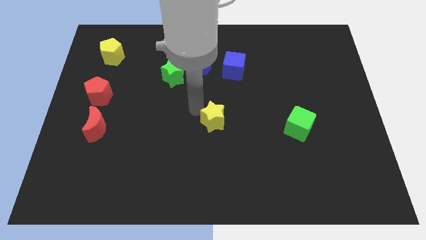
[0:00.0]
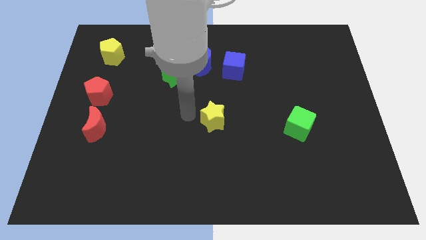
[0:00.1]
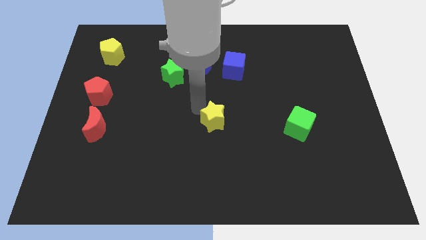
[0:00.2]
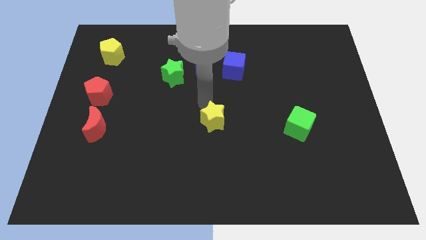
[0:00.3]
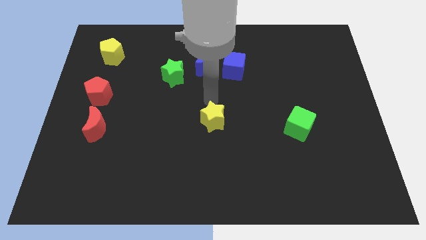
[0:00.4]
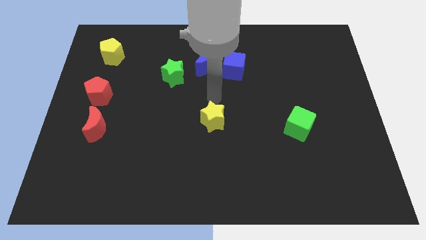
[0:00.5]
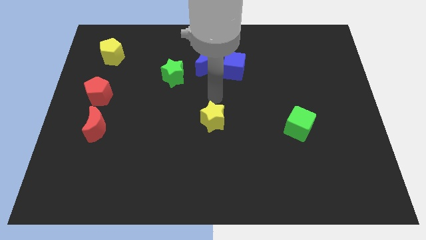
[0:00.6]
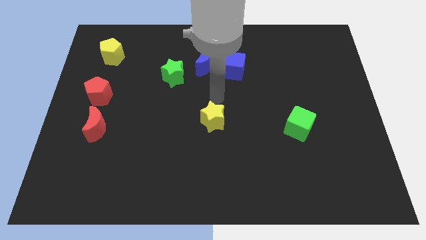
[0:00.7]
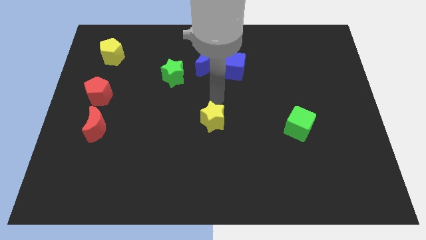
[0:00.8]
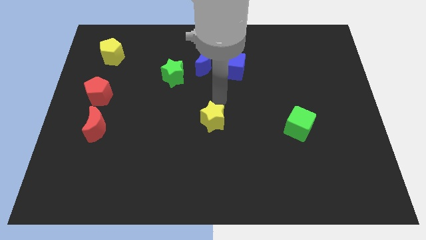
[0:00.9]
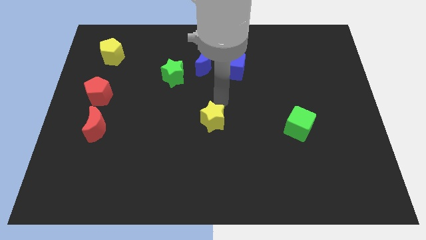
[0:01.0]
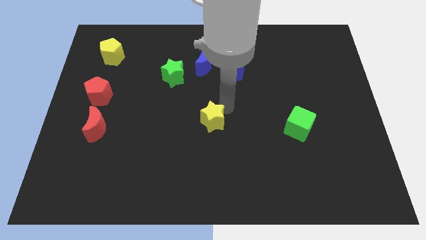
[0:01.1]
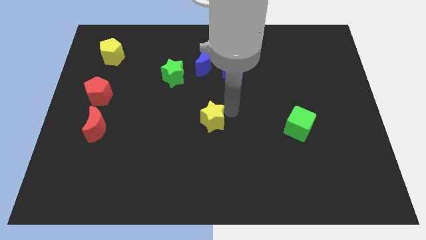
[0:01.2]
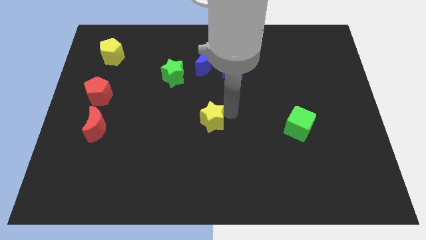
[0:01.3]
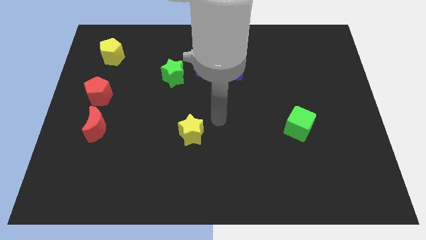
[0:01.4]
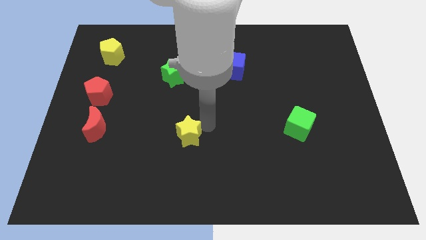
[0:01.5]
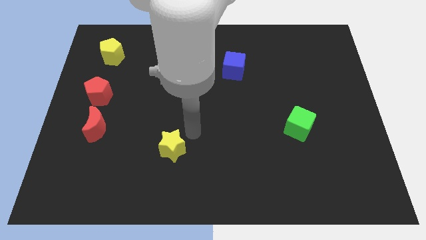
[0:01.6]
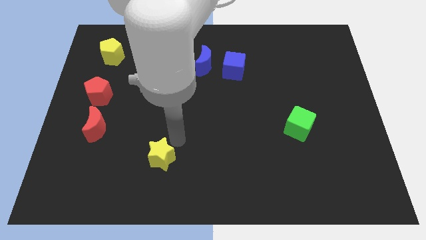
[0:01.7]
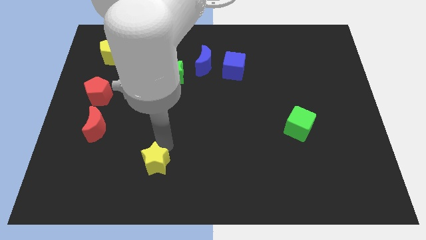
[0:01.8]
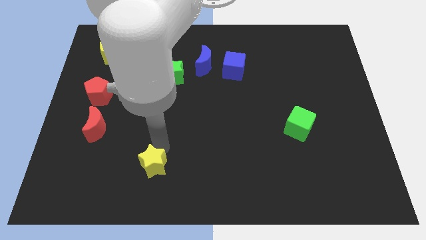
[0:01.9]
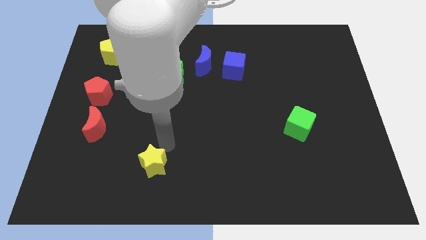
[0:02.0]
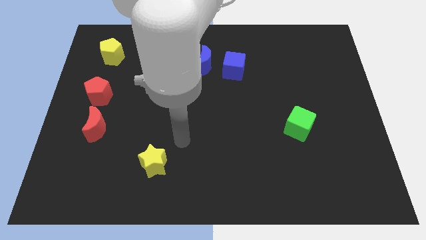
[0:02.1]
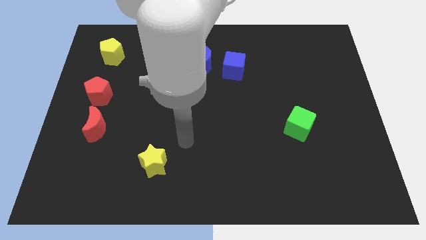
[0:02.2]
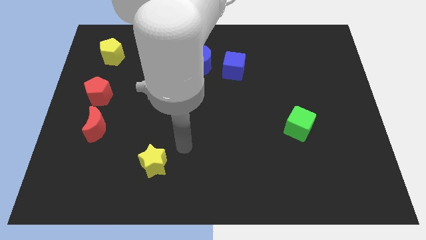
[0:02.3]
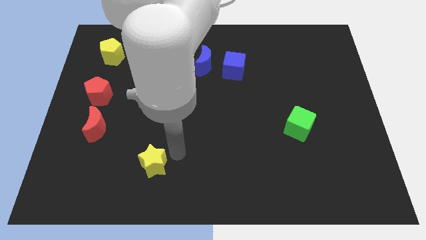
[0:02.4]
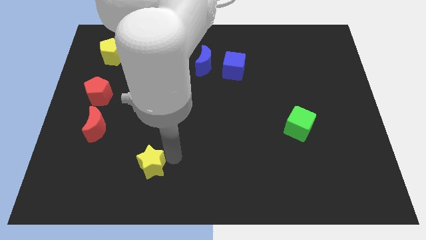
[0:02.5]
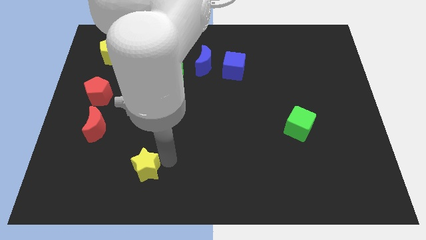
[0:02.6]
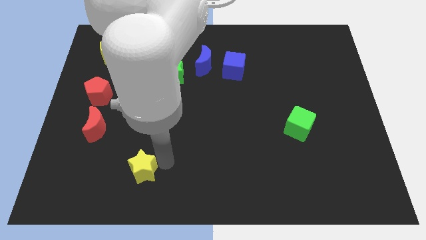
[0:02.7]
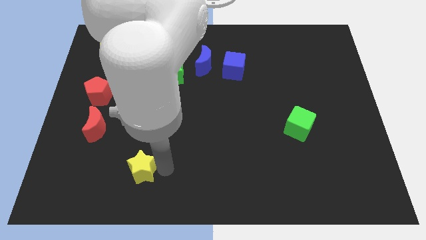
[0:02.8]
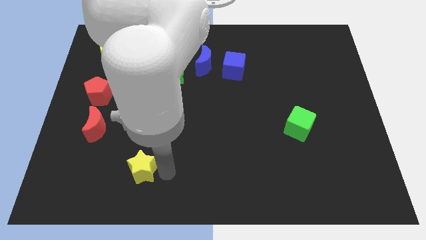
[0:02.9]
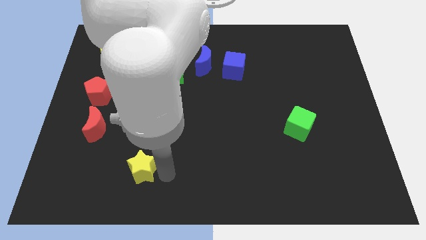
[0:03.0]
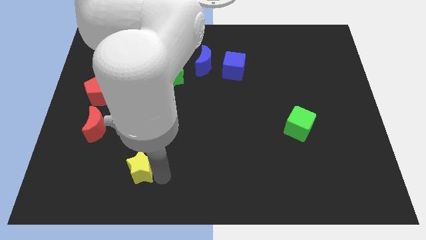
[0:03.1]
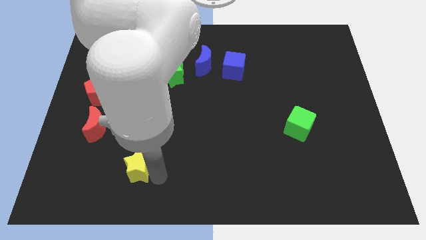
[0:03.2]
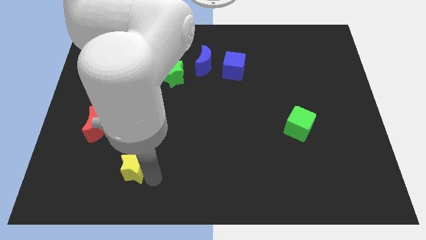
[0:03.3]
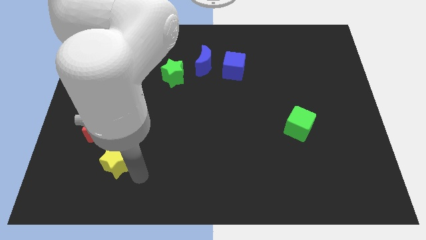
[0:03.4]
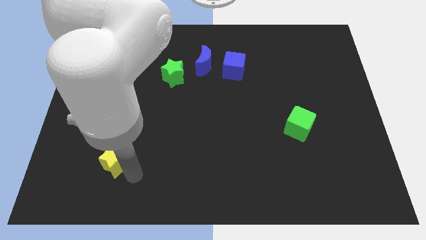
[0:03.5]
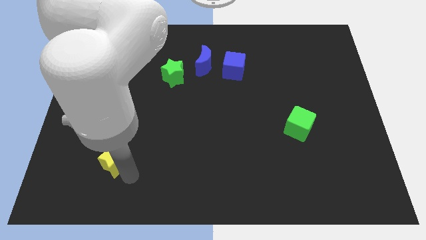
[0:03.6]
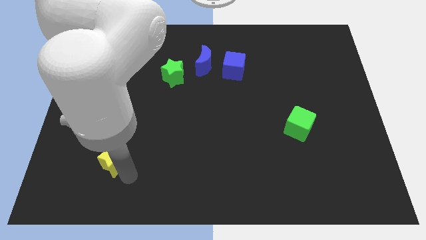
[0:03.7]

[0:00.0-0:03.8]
move the yellow star towards the bottom left side of the board

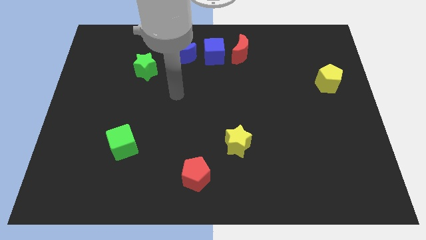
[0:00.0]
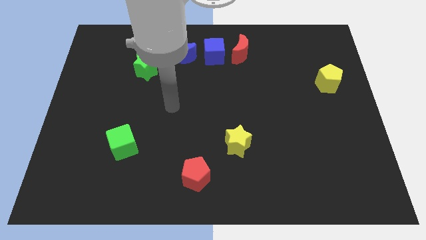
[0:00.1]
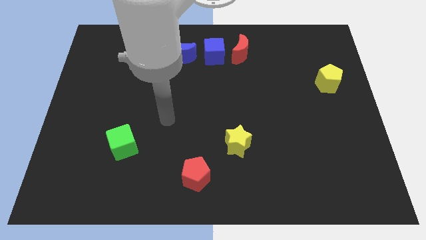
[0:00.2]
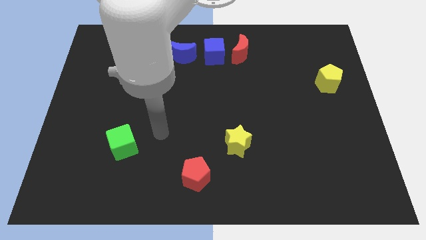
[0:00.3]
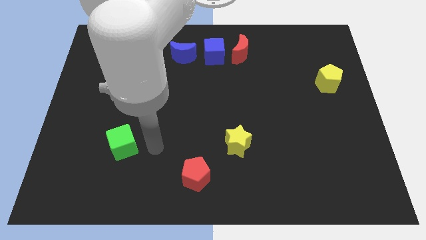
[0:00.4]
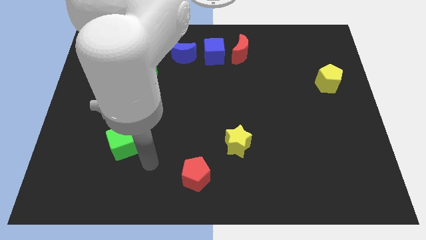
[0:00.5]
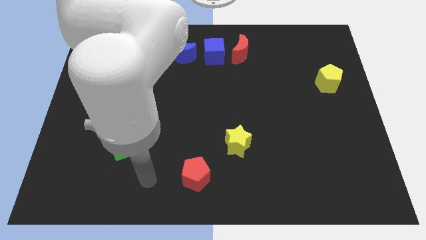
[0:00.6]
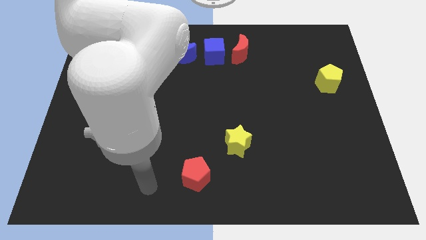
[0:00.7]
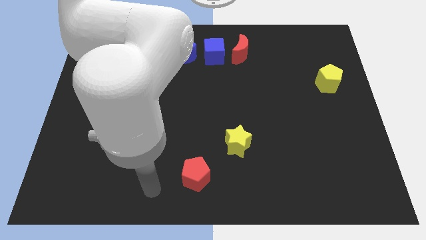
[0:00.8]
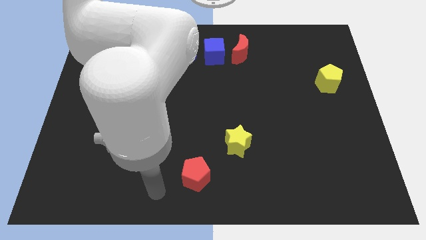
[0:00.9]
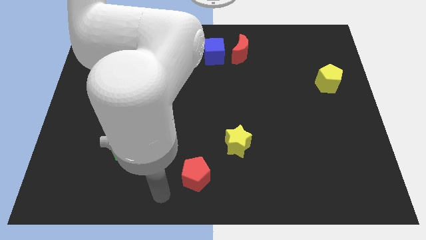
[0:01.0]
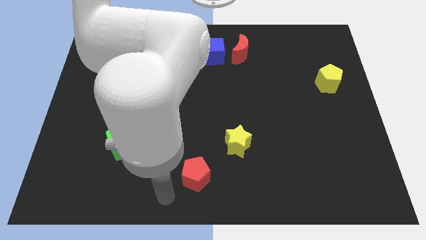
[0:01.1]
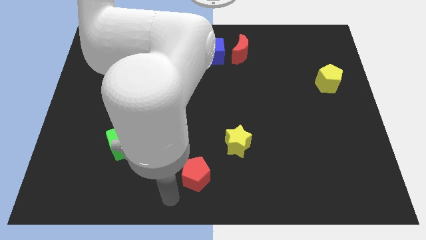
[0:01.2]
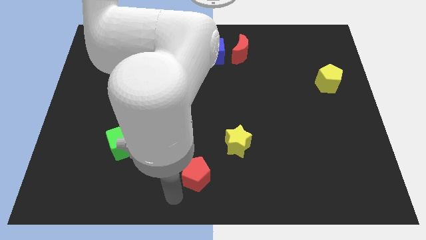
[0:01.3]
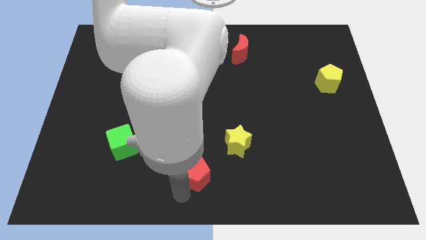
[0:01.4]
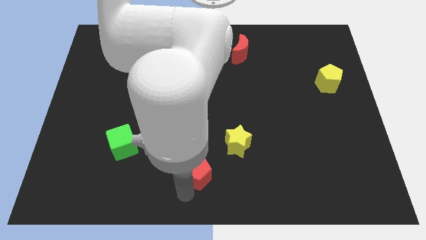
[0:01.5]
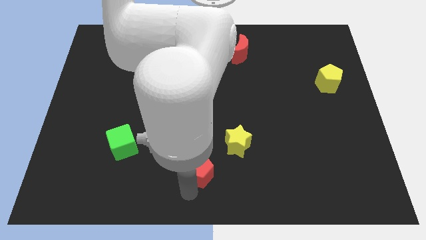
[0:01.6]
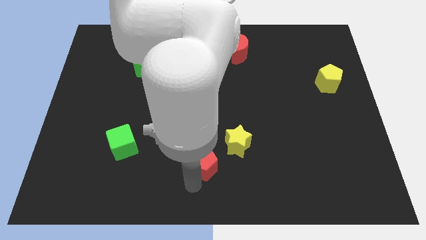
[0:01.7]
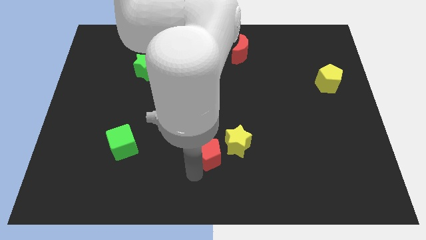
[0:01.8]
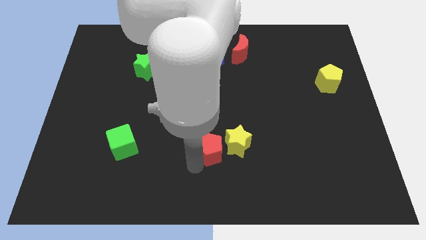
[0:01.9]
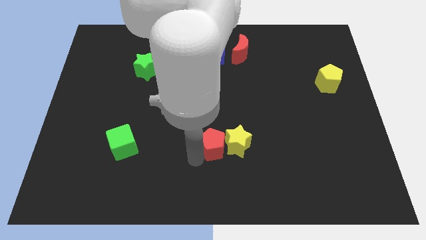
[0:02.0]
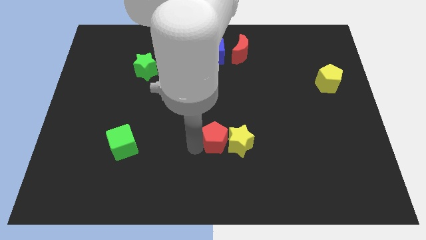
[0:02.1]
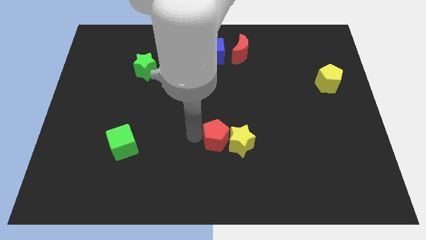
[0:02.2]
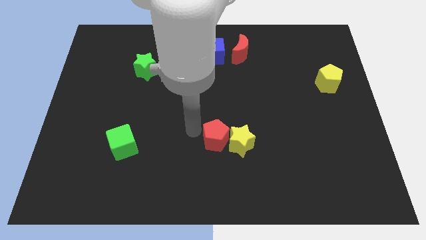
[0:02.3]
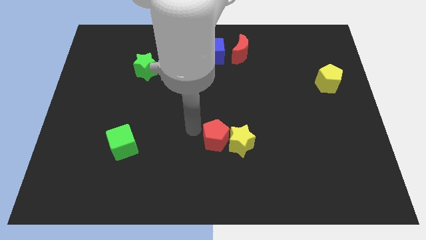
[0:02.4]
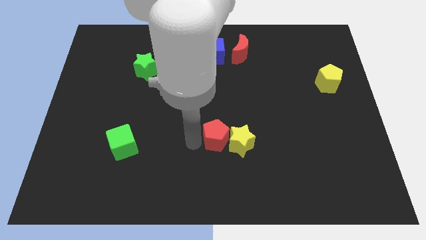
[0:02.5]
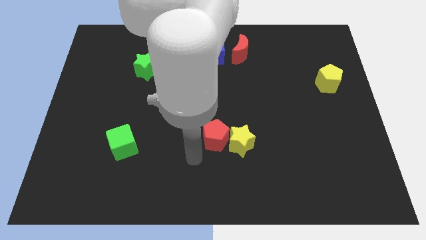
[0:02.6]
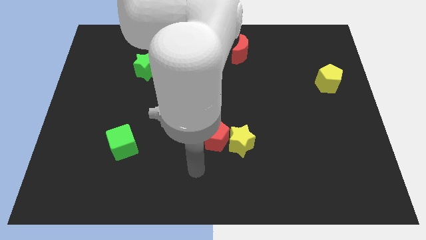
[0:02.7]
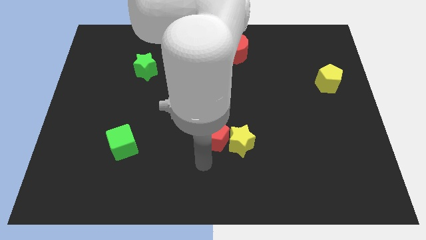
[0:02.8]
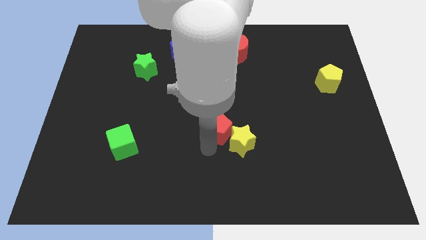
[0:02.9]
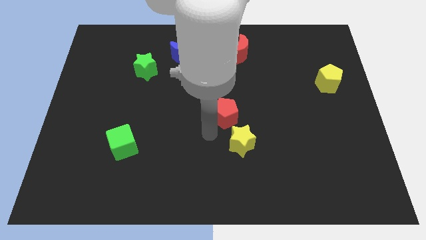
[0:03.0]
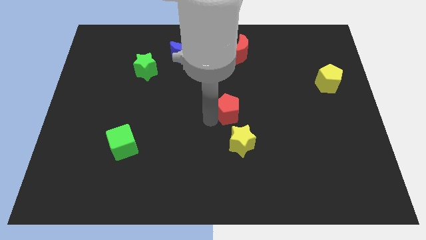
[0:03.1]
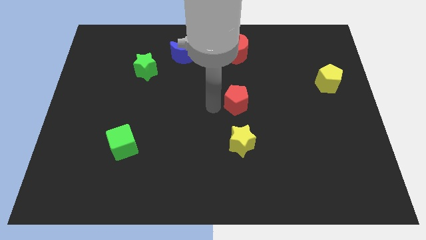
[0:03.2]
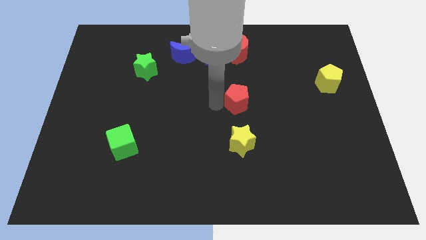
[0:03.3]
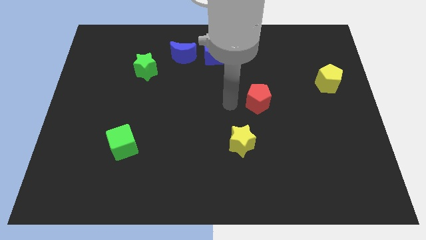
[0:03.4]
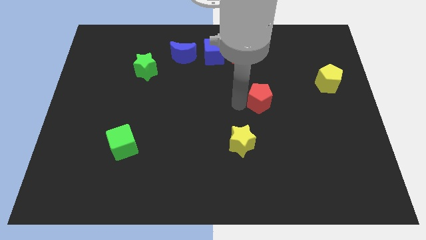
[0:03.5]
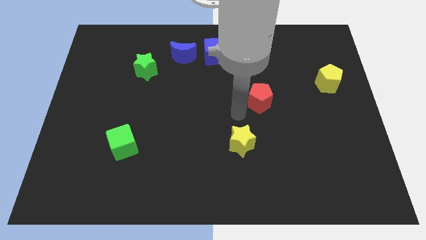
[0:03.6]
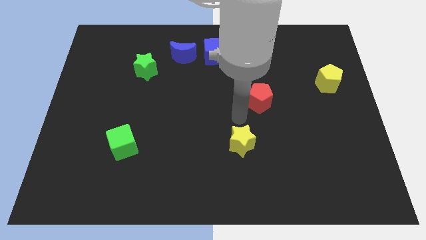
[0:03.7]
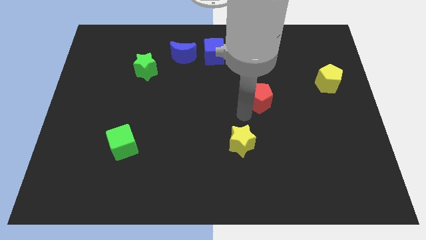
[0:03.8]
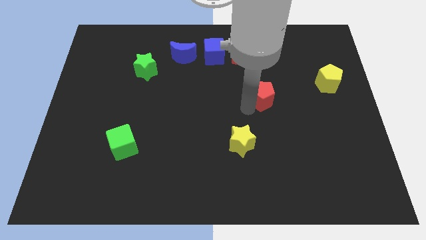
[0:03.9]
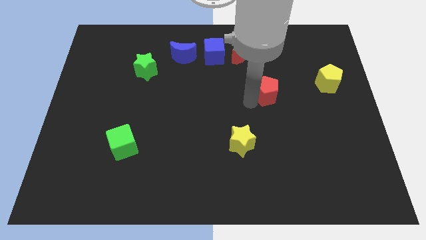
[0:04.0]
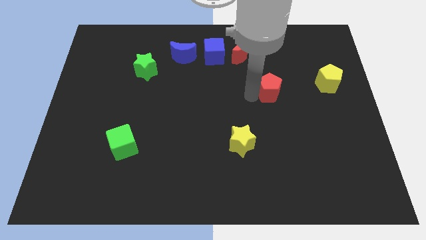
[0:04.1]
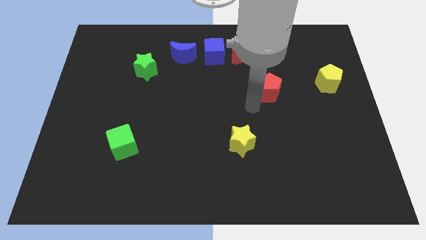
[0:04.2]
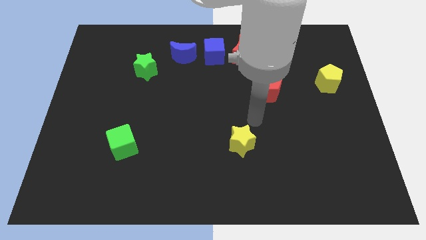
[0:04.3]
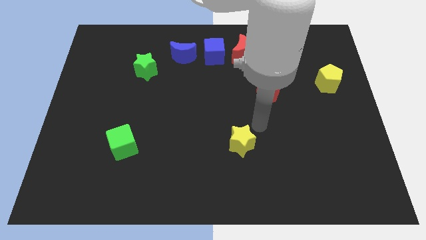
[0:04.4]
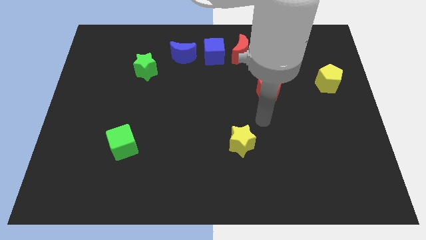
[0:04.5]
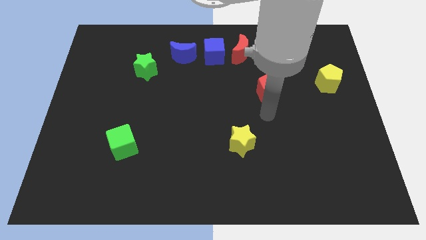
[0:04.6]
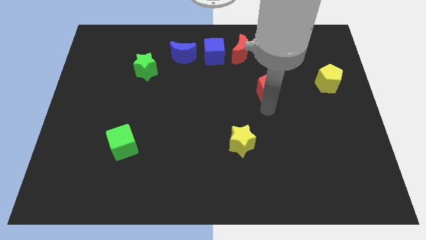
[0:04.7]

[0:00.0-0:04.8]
push the red pentagon to the top right of the board

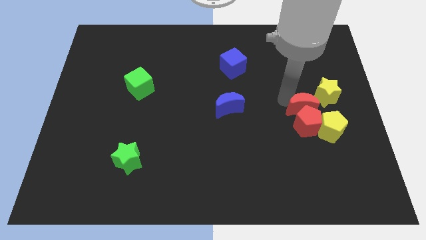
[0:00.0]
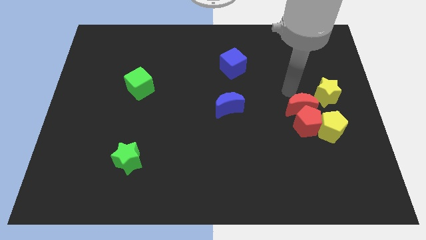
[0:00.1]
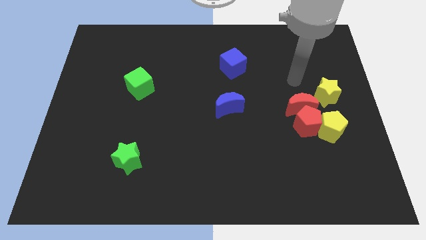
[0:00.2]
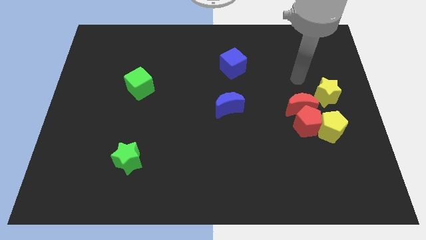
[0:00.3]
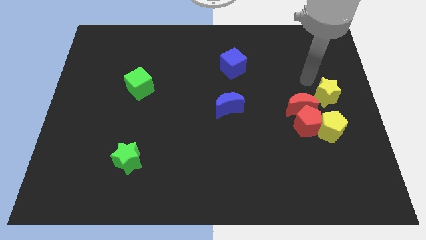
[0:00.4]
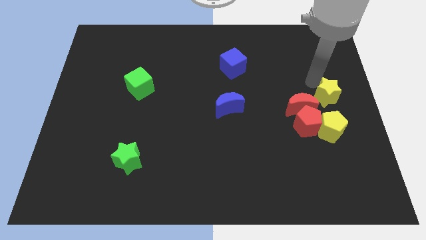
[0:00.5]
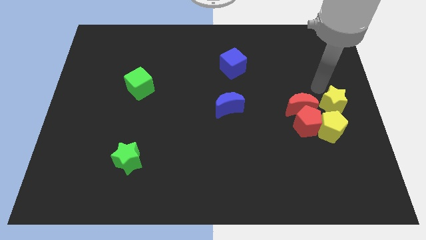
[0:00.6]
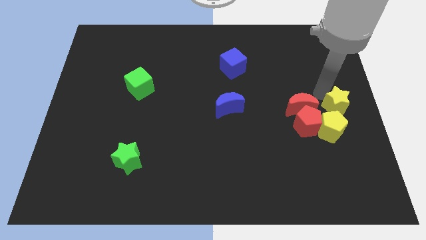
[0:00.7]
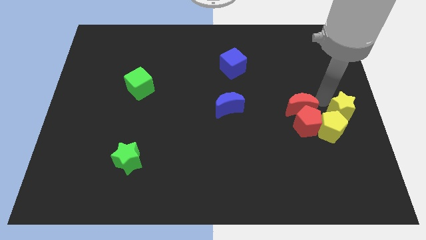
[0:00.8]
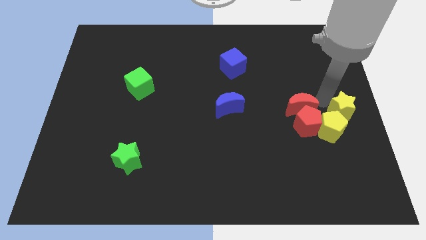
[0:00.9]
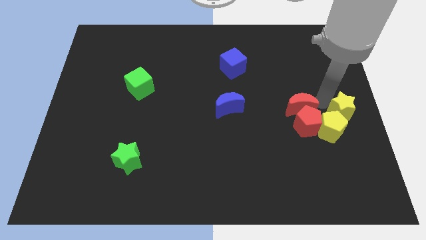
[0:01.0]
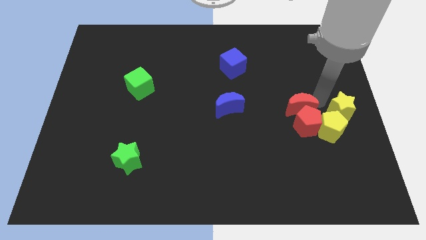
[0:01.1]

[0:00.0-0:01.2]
place the yellow star close to the yellow pentagon
